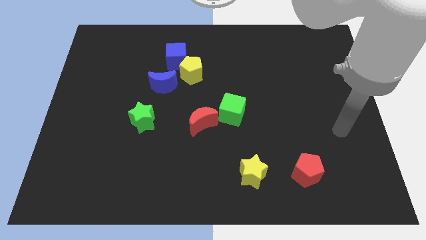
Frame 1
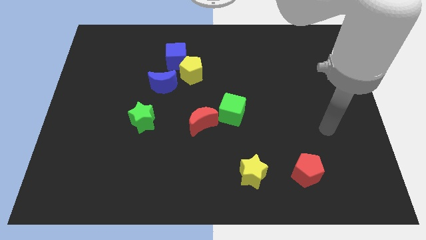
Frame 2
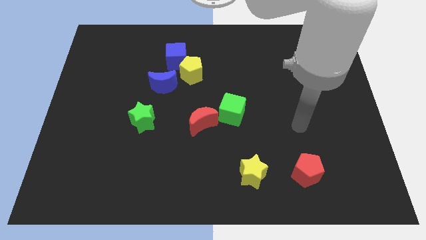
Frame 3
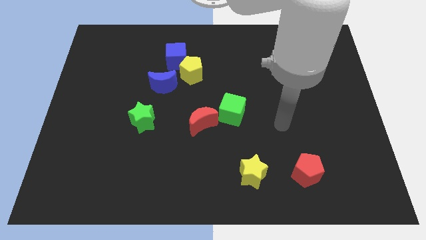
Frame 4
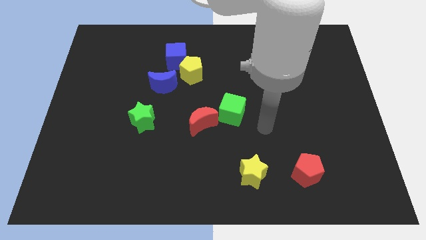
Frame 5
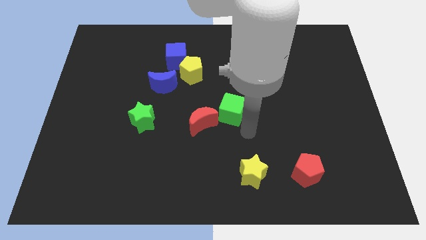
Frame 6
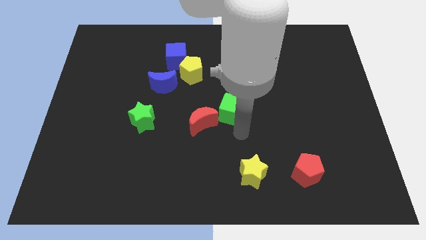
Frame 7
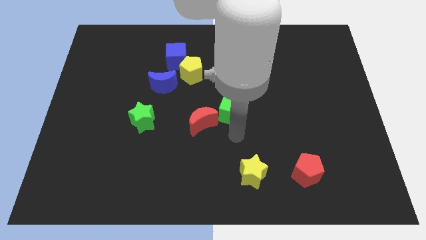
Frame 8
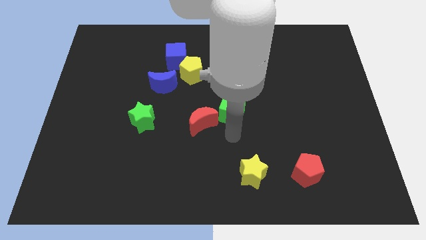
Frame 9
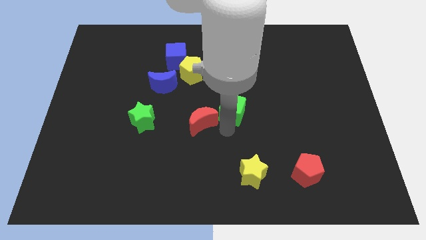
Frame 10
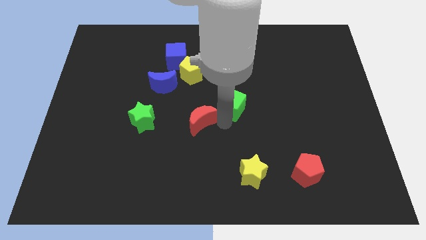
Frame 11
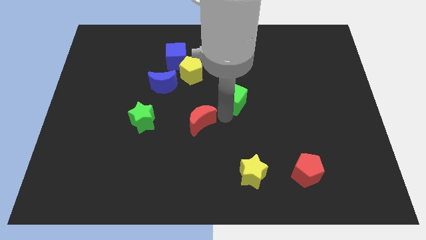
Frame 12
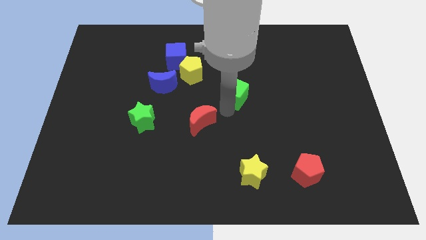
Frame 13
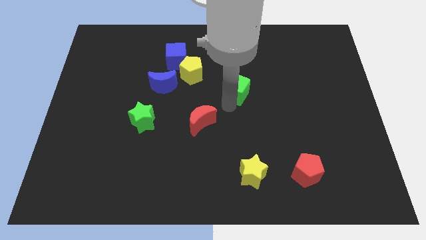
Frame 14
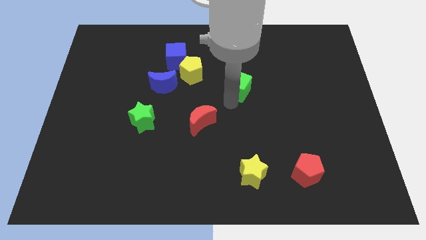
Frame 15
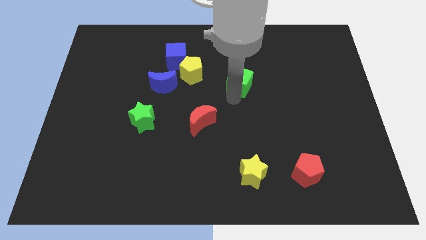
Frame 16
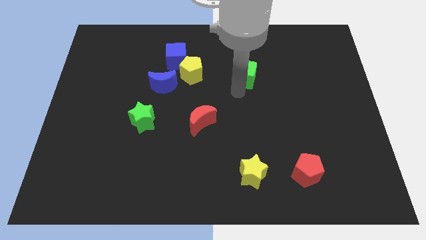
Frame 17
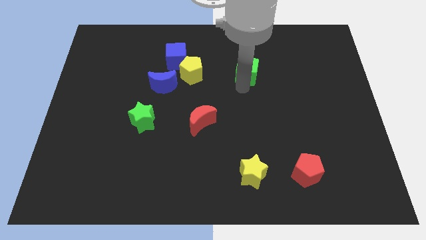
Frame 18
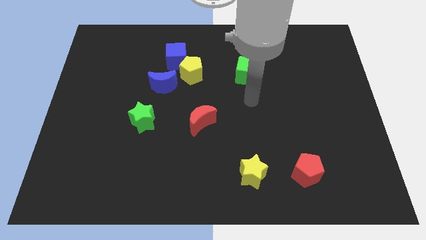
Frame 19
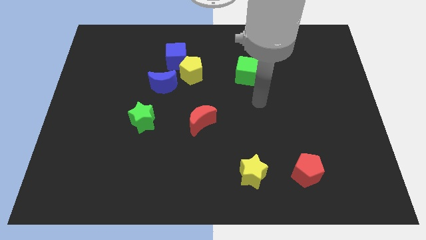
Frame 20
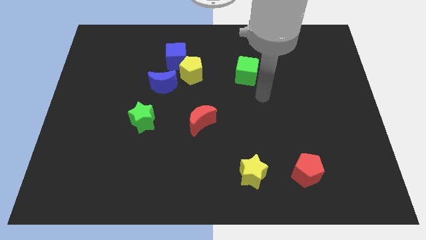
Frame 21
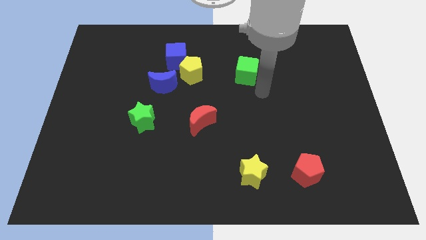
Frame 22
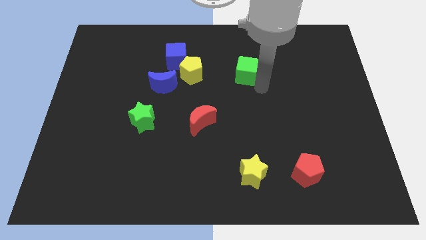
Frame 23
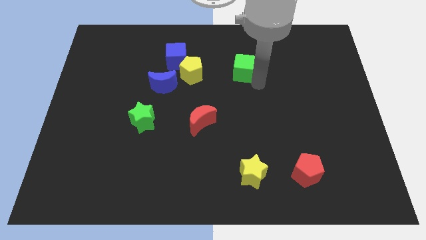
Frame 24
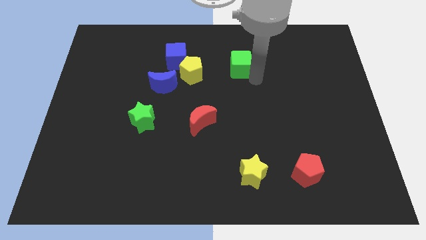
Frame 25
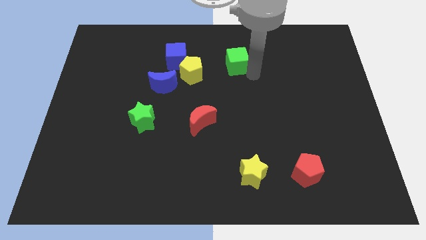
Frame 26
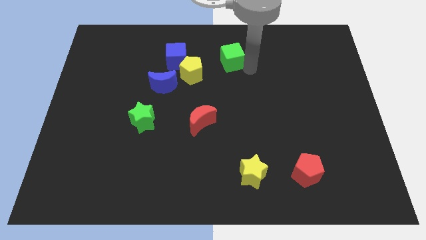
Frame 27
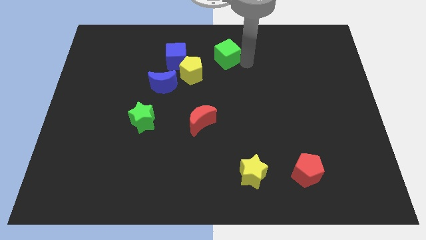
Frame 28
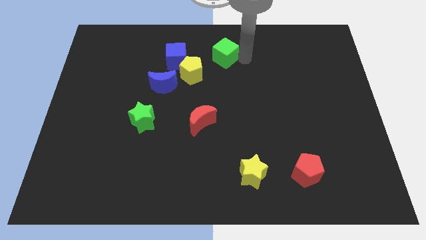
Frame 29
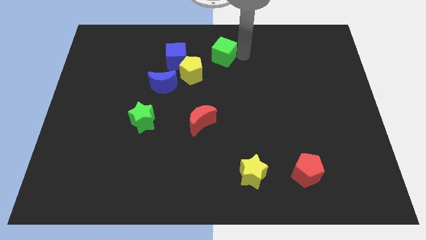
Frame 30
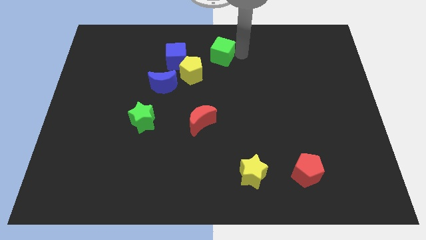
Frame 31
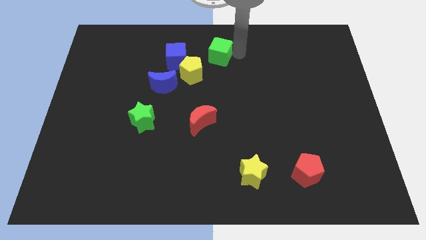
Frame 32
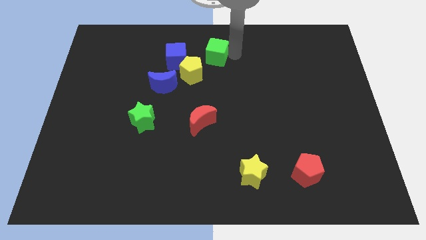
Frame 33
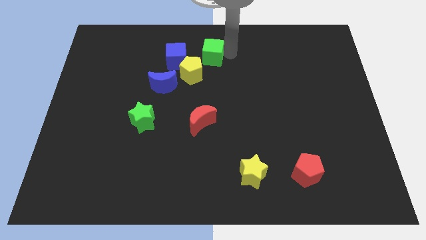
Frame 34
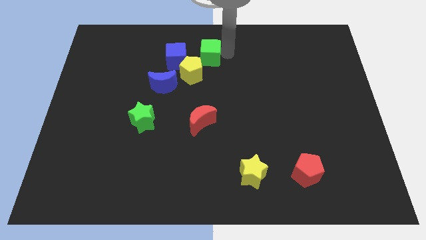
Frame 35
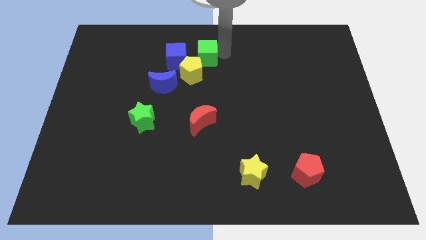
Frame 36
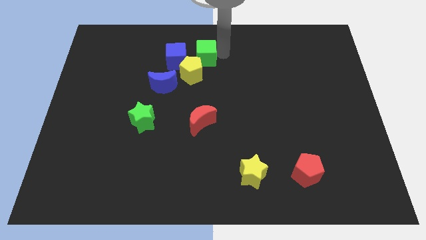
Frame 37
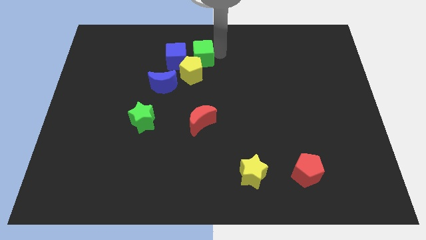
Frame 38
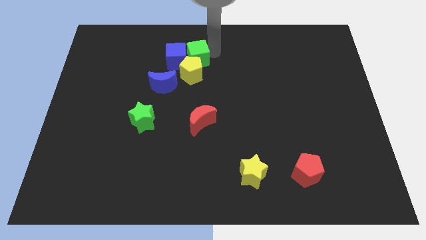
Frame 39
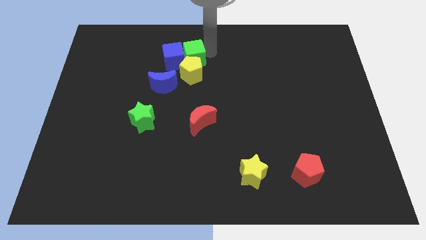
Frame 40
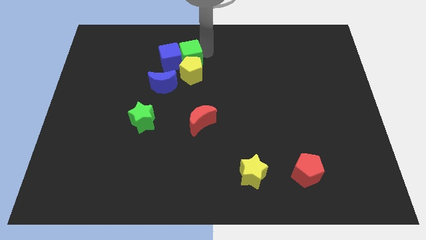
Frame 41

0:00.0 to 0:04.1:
push the green cube close to the blue cube

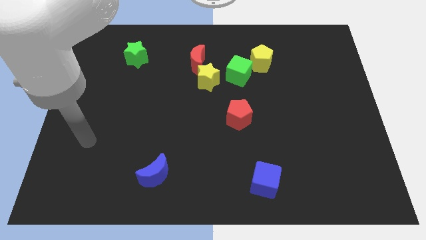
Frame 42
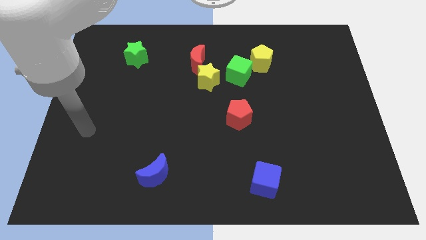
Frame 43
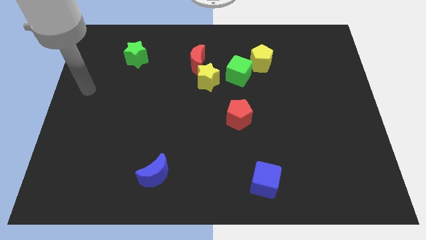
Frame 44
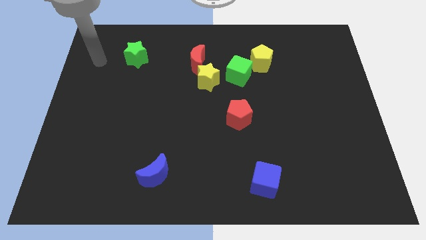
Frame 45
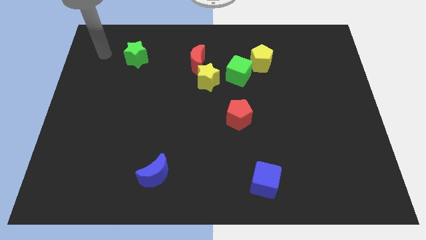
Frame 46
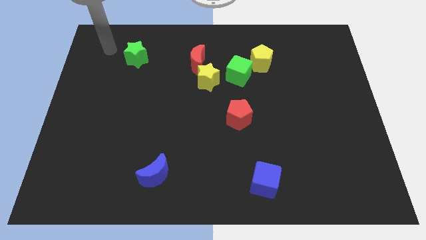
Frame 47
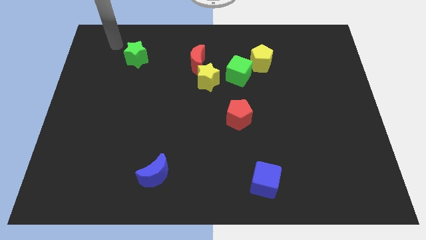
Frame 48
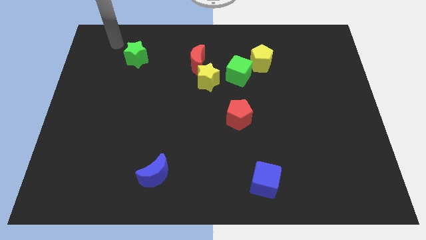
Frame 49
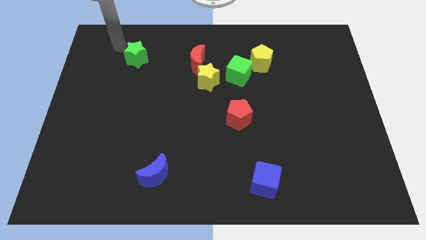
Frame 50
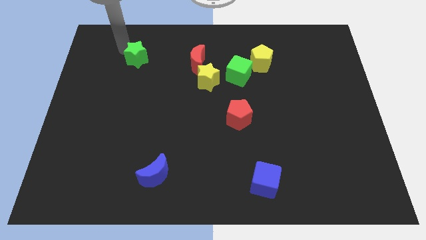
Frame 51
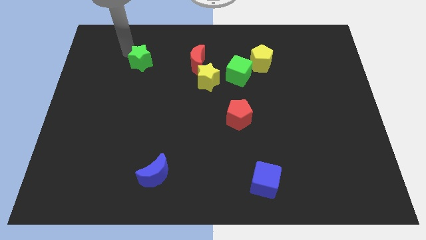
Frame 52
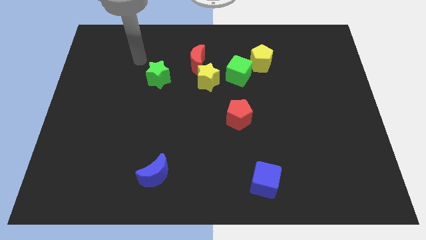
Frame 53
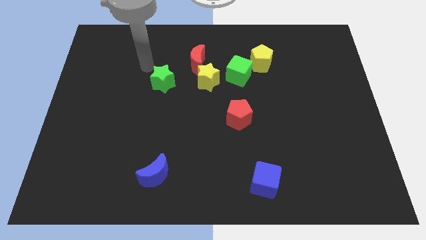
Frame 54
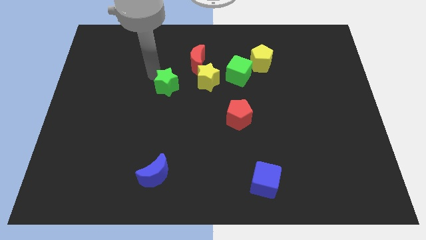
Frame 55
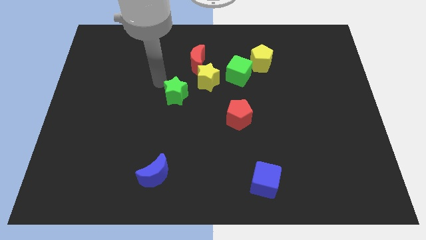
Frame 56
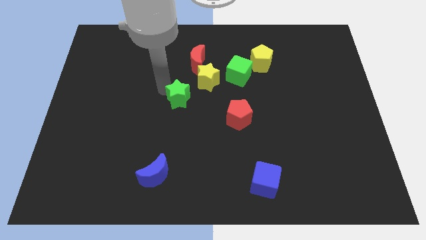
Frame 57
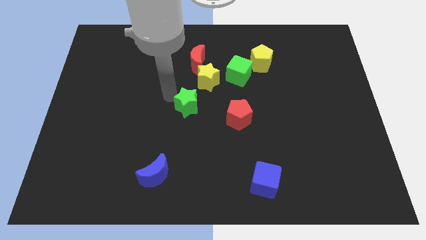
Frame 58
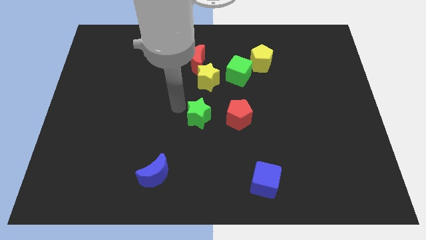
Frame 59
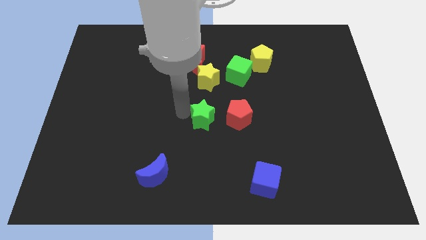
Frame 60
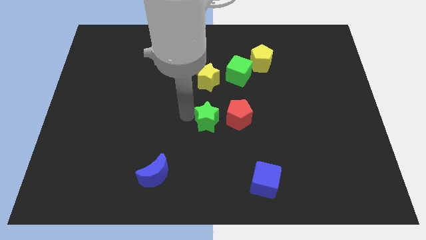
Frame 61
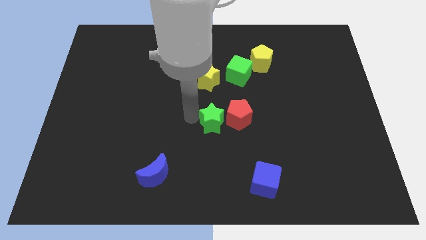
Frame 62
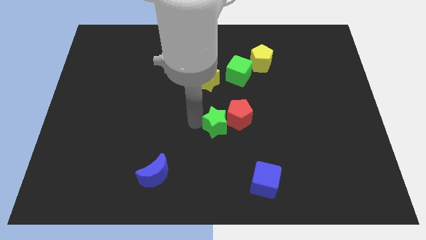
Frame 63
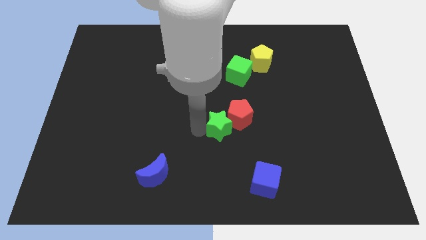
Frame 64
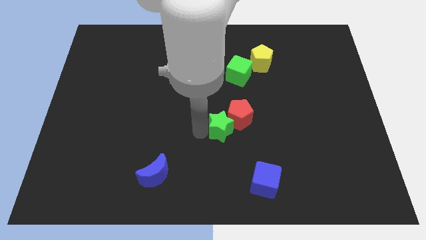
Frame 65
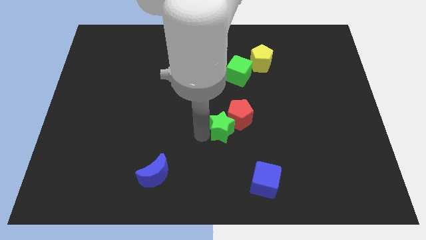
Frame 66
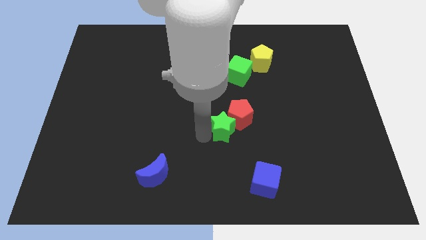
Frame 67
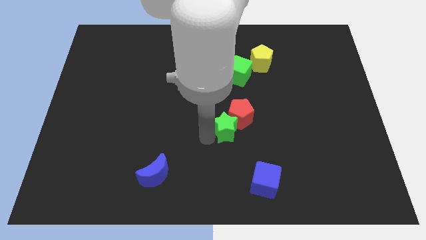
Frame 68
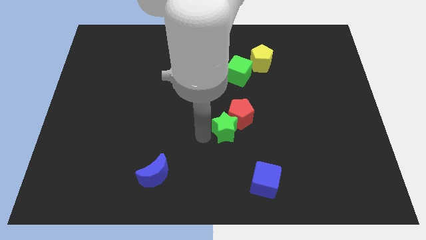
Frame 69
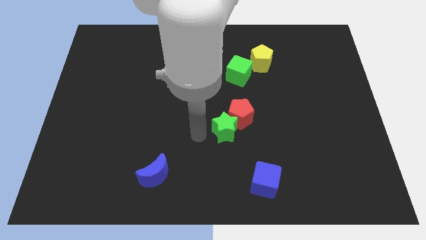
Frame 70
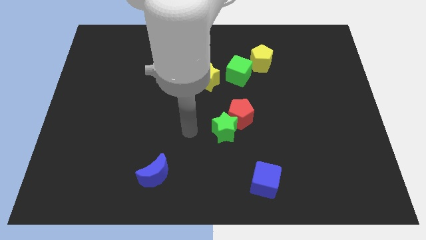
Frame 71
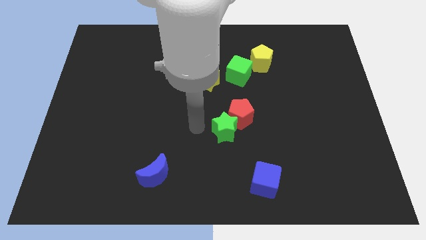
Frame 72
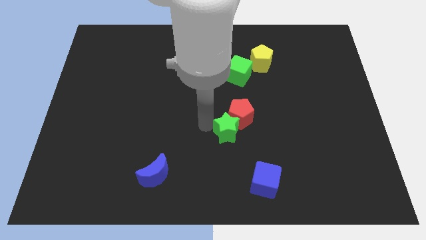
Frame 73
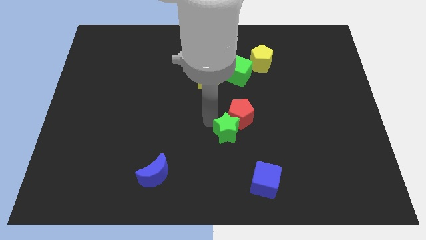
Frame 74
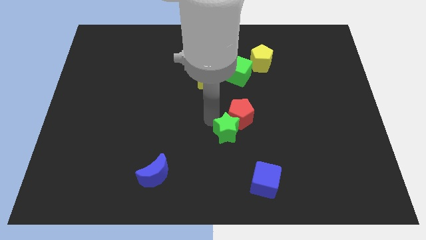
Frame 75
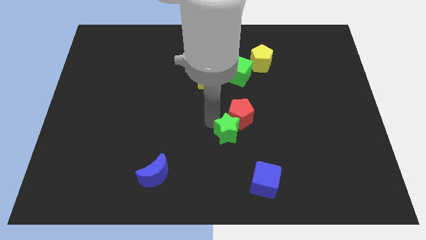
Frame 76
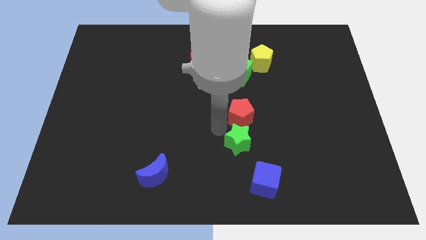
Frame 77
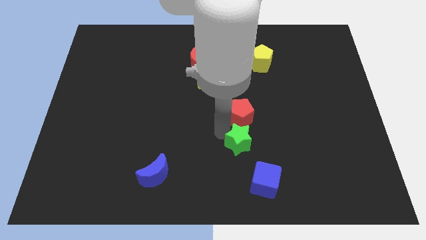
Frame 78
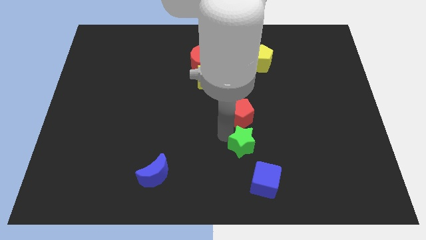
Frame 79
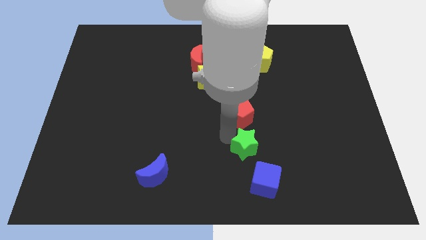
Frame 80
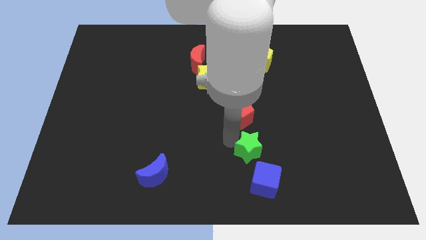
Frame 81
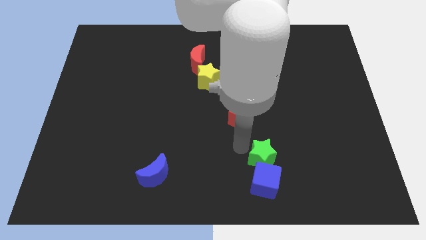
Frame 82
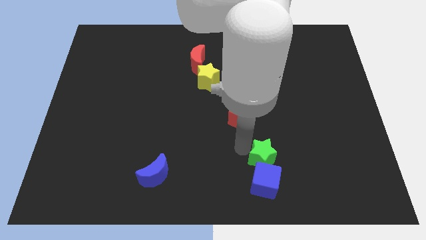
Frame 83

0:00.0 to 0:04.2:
push the green star towards the blue cube
